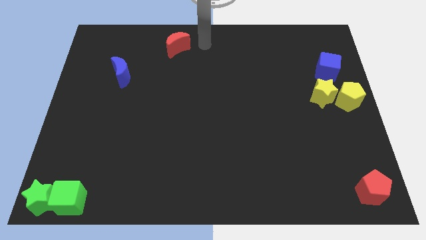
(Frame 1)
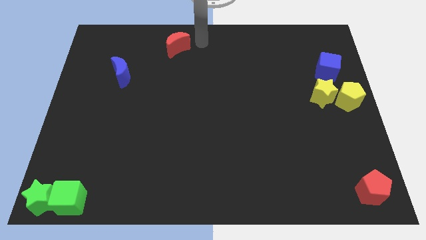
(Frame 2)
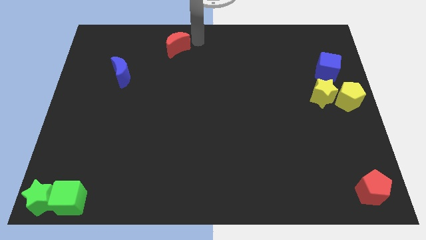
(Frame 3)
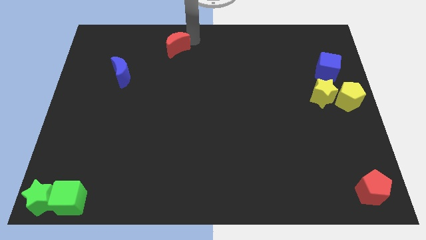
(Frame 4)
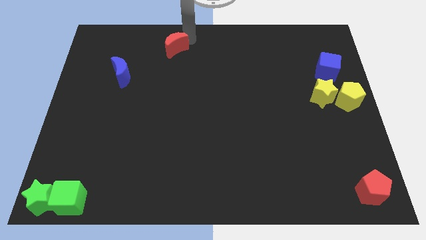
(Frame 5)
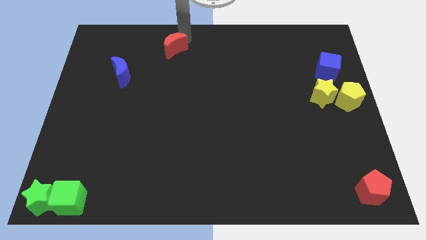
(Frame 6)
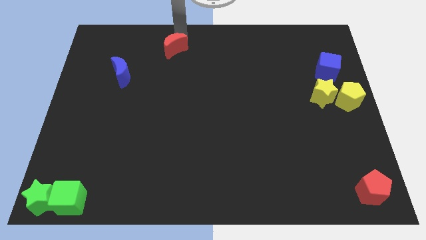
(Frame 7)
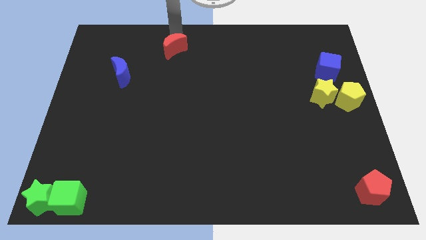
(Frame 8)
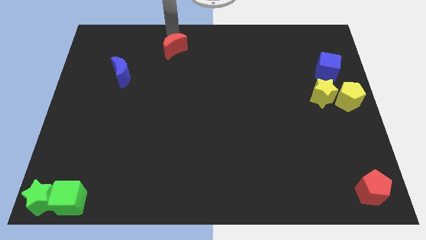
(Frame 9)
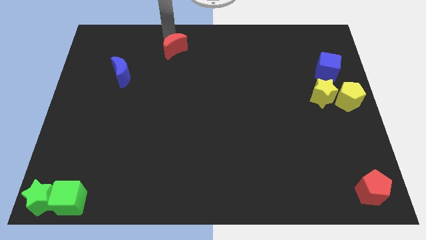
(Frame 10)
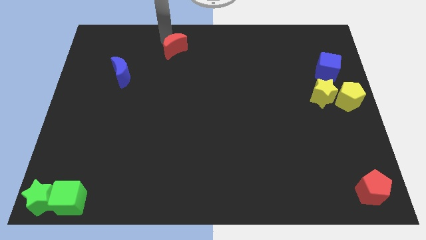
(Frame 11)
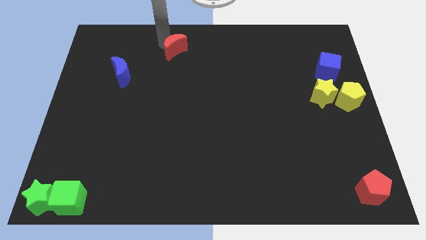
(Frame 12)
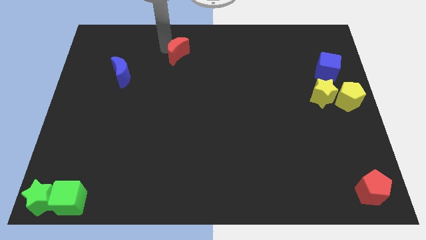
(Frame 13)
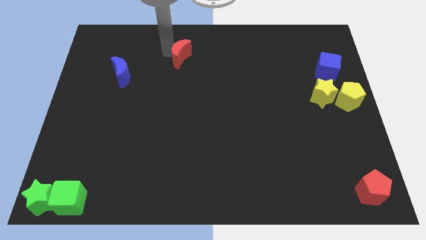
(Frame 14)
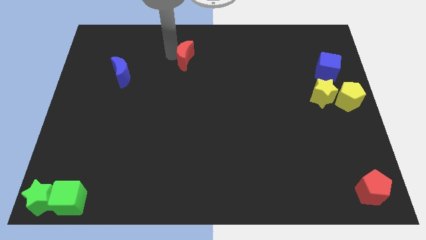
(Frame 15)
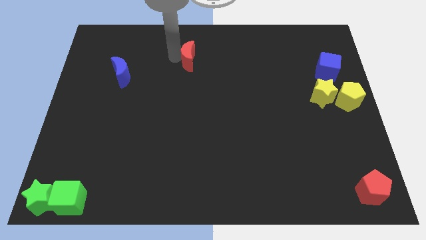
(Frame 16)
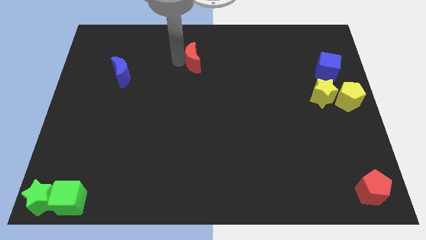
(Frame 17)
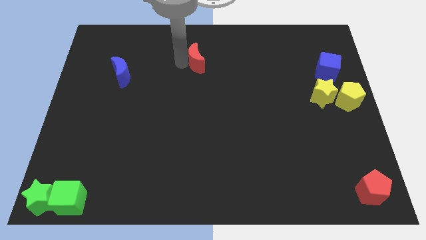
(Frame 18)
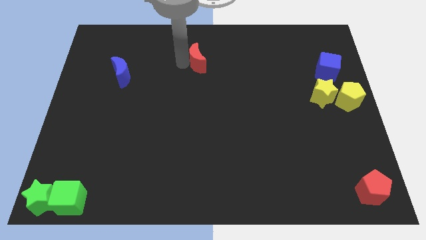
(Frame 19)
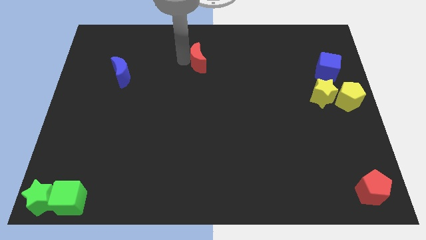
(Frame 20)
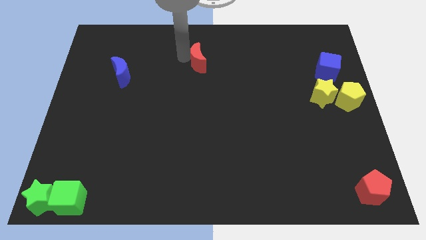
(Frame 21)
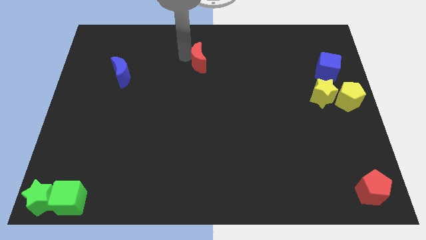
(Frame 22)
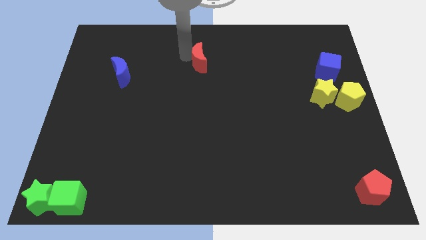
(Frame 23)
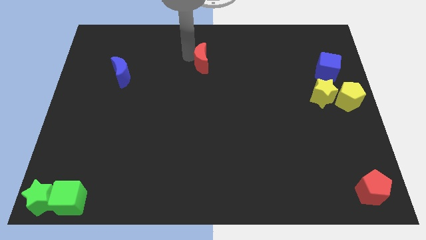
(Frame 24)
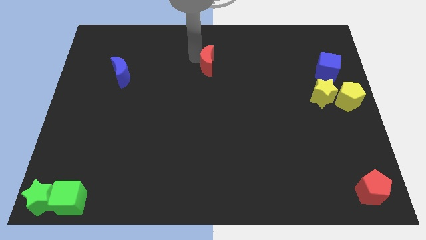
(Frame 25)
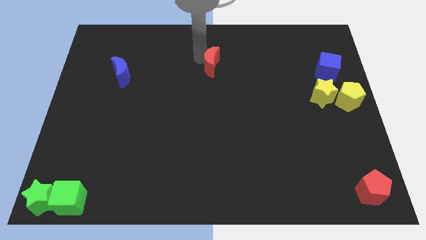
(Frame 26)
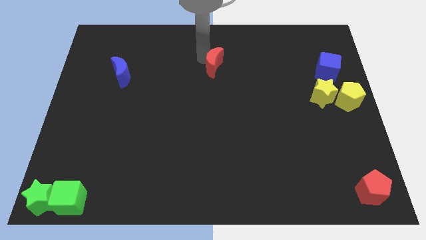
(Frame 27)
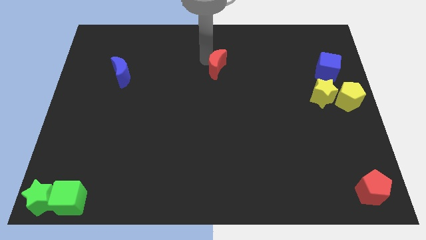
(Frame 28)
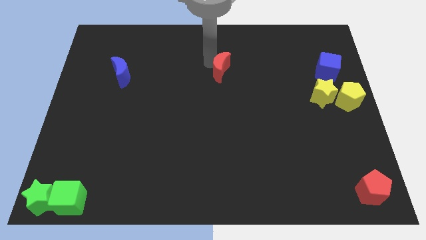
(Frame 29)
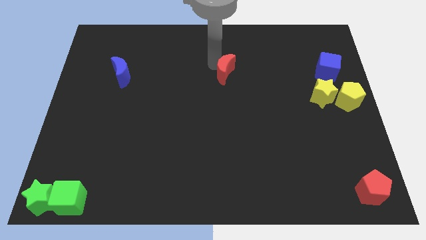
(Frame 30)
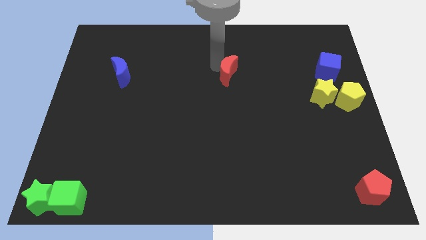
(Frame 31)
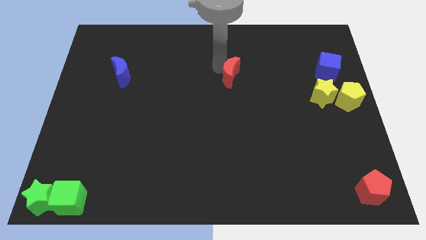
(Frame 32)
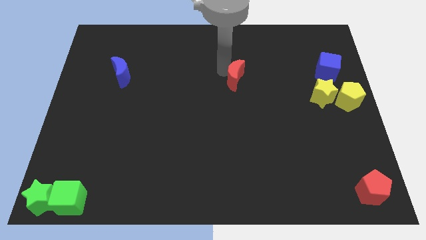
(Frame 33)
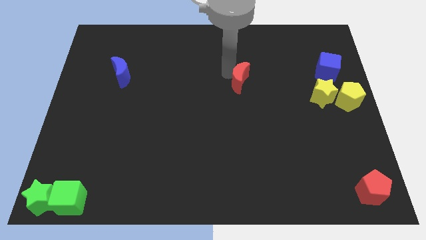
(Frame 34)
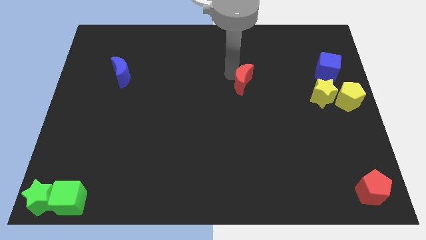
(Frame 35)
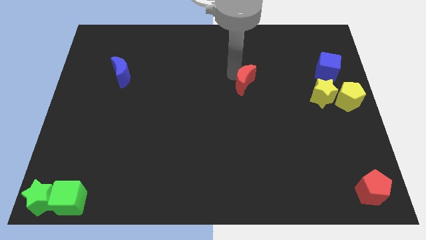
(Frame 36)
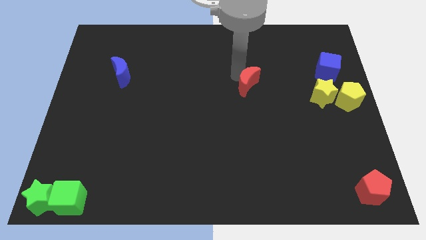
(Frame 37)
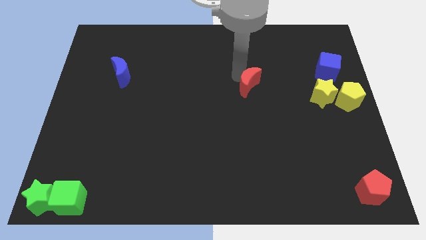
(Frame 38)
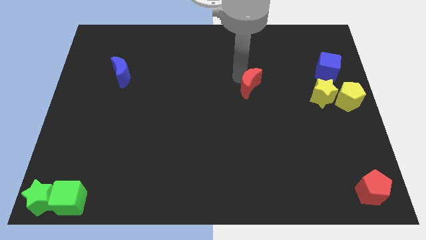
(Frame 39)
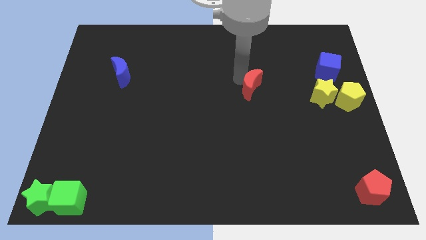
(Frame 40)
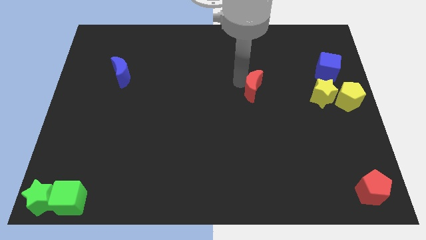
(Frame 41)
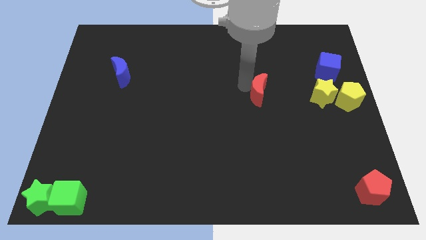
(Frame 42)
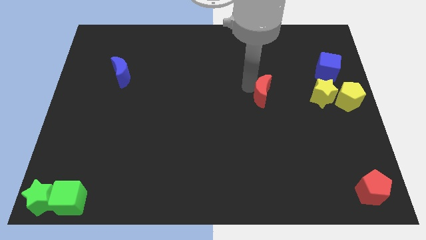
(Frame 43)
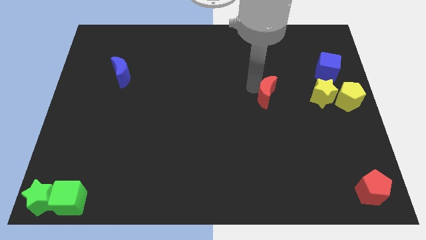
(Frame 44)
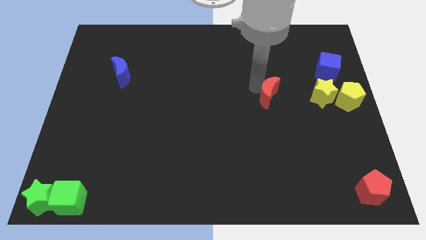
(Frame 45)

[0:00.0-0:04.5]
move the red crescent horizontally to the left of the yellow star

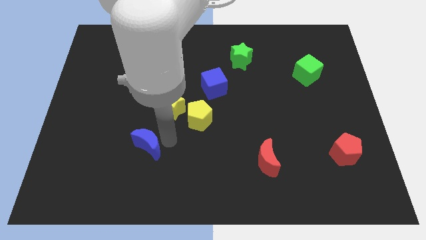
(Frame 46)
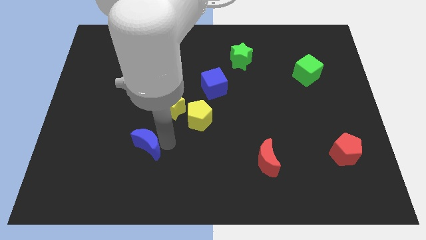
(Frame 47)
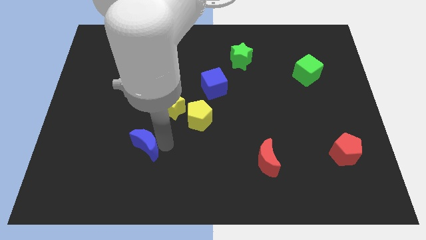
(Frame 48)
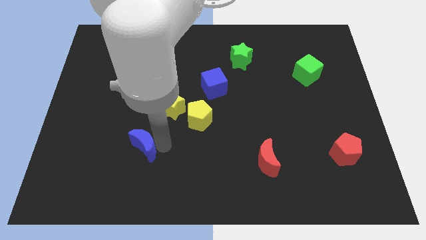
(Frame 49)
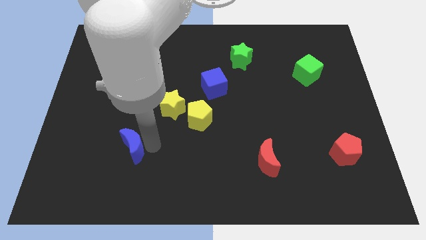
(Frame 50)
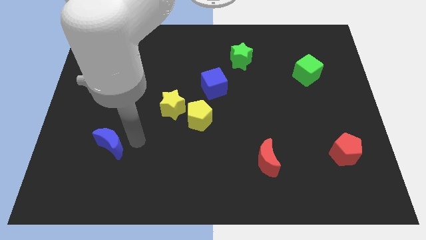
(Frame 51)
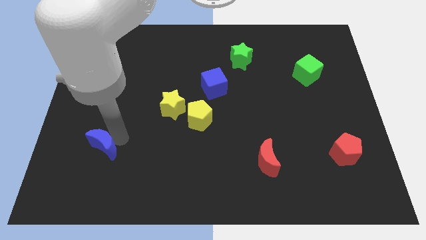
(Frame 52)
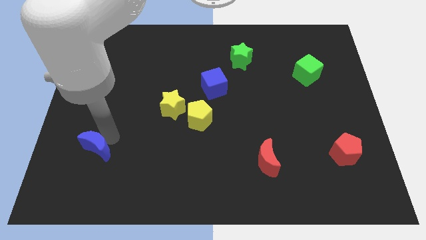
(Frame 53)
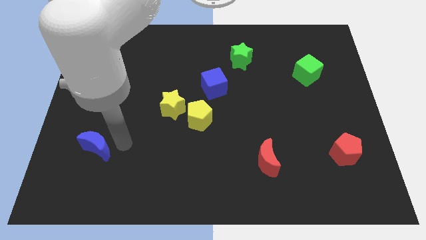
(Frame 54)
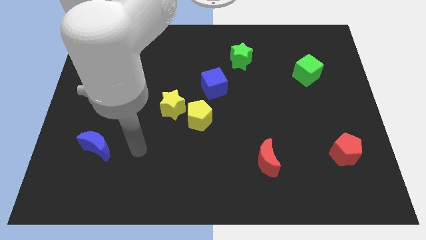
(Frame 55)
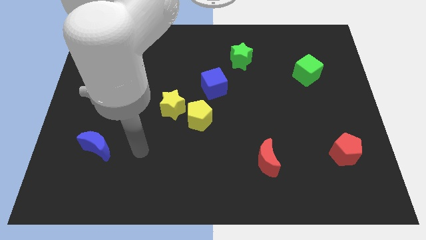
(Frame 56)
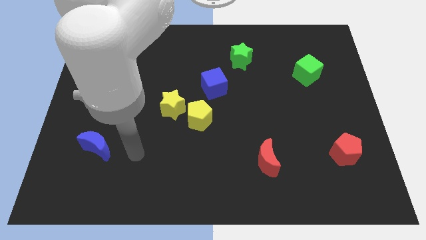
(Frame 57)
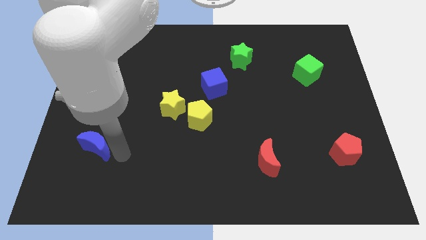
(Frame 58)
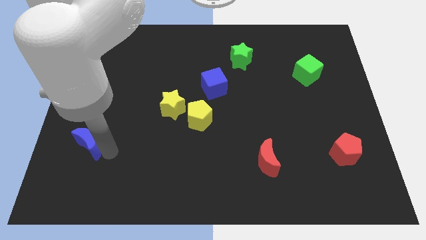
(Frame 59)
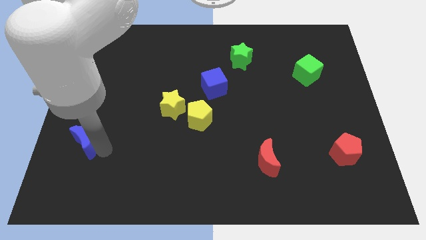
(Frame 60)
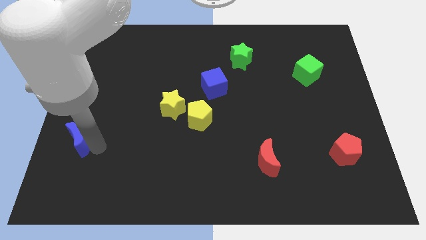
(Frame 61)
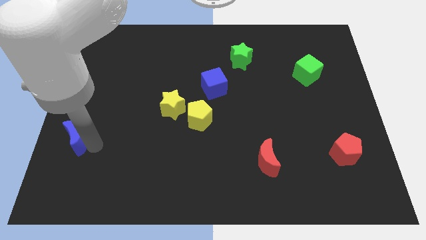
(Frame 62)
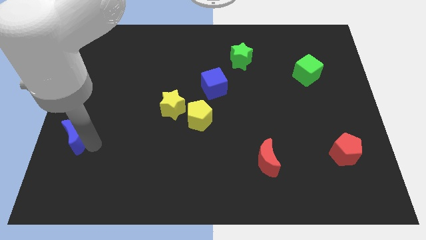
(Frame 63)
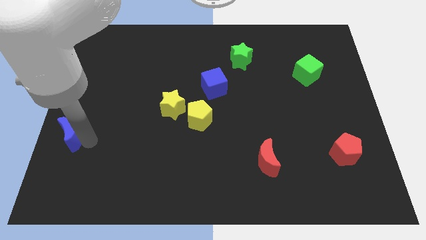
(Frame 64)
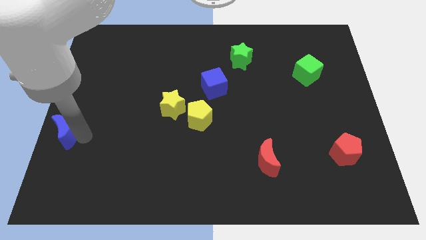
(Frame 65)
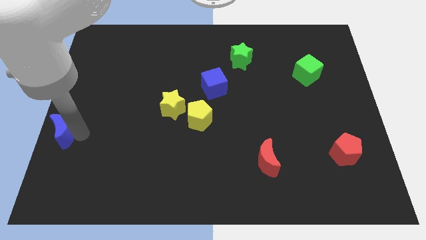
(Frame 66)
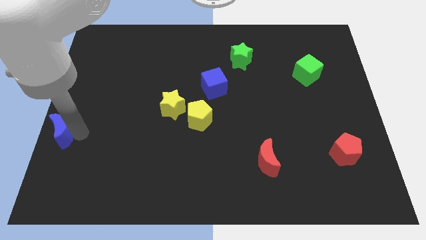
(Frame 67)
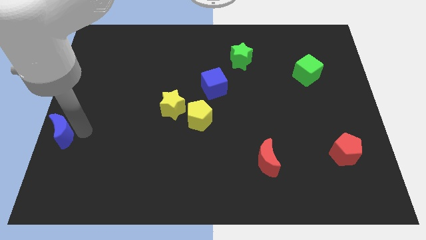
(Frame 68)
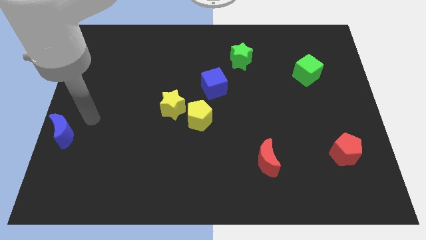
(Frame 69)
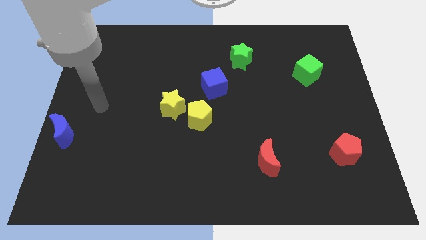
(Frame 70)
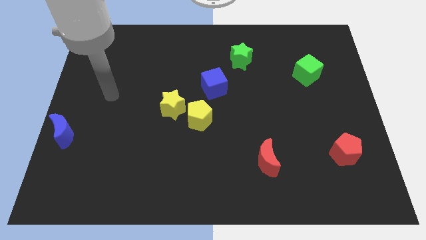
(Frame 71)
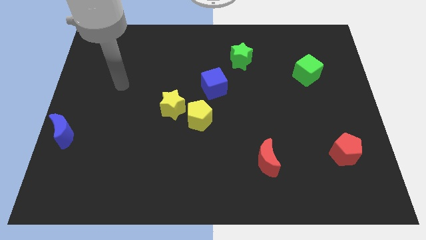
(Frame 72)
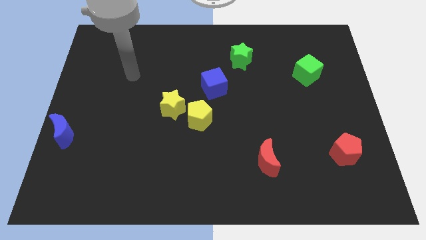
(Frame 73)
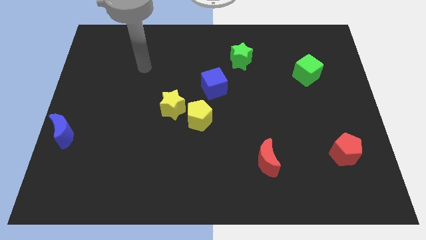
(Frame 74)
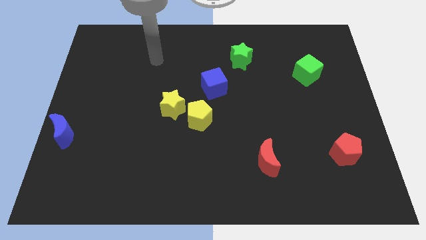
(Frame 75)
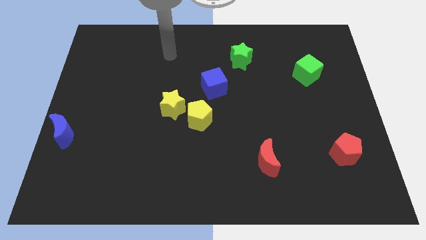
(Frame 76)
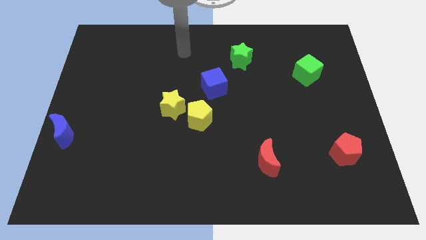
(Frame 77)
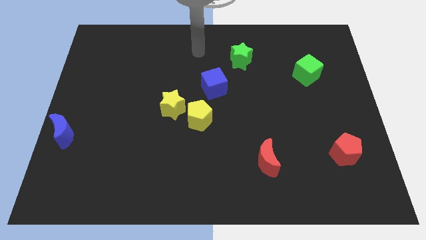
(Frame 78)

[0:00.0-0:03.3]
slide the blue moon diagonally on the bottom left side of the board

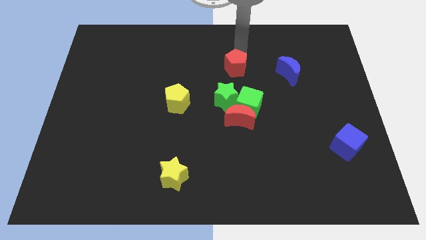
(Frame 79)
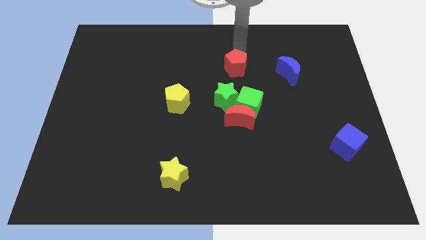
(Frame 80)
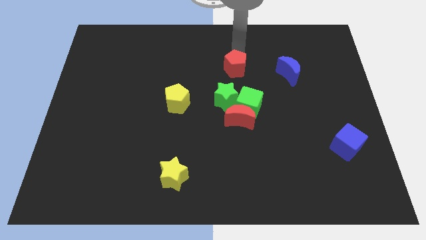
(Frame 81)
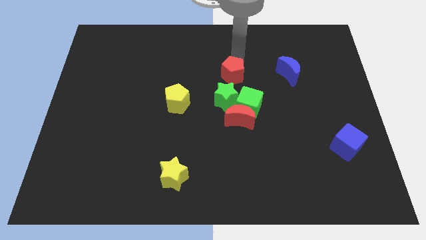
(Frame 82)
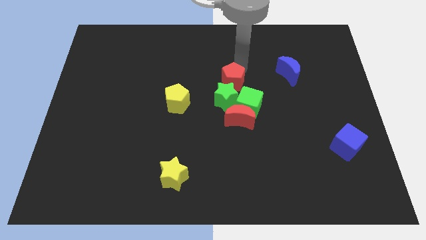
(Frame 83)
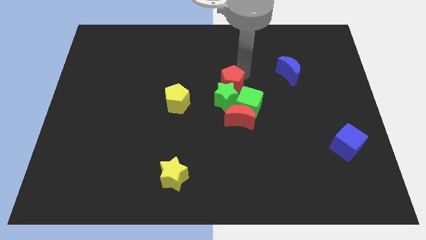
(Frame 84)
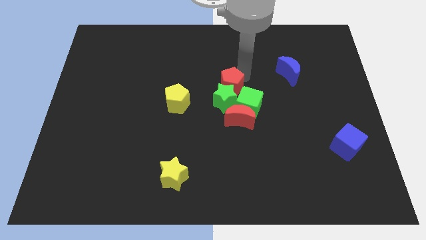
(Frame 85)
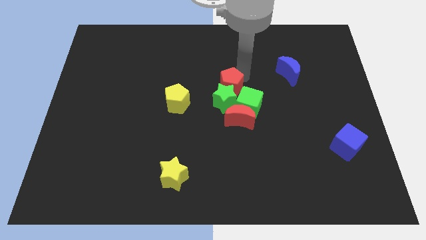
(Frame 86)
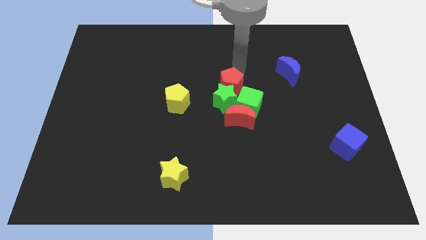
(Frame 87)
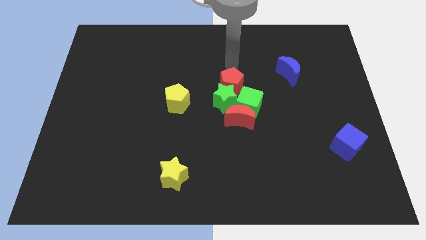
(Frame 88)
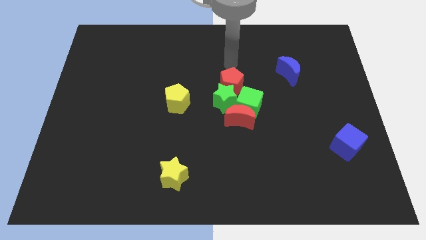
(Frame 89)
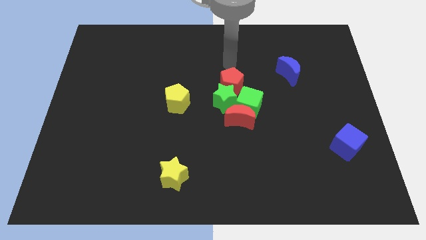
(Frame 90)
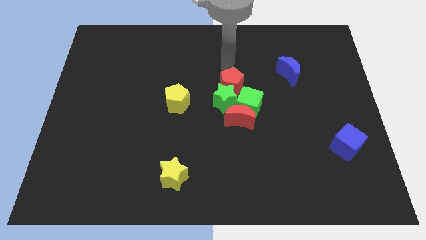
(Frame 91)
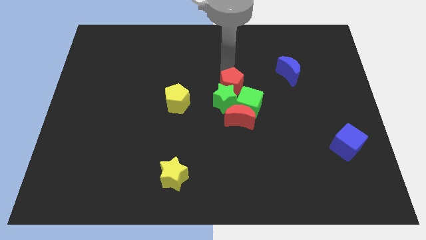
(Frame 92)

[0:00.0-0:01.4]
push red pentagon near green star
